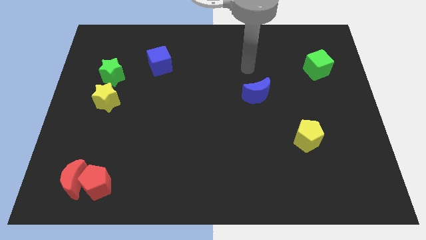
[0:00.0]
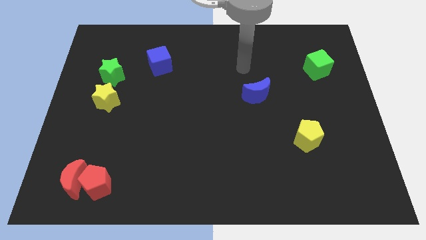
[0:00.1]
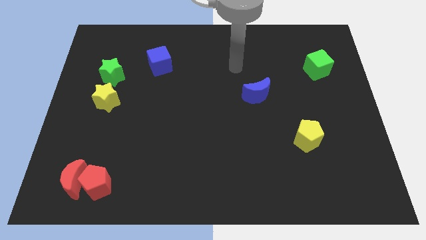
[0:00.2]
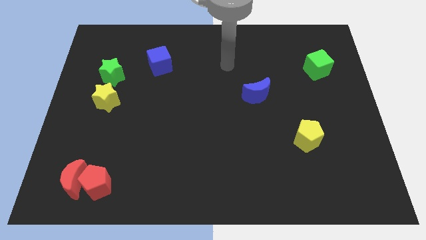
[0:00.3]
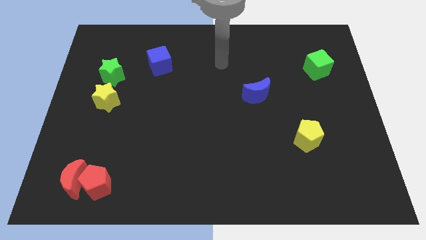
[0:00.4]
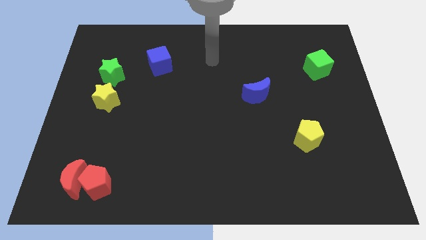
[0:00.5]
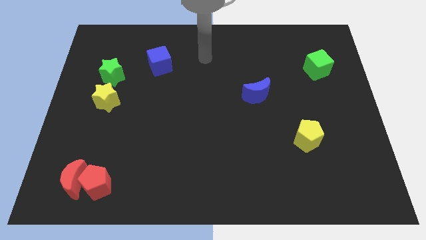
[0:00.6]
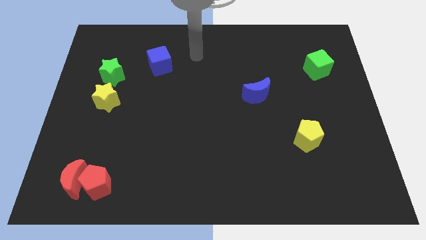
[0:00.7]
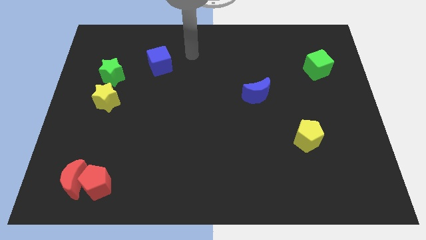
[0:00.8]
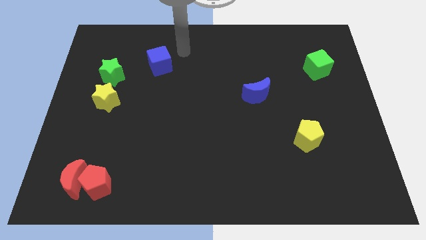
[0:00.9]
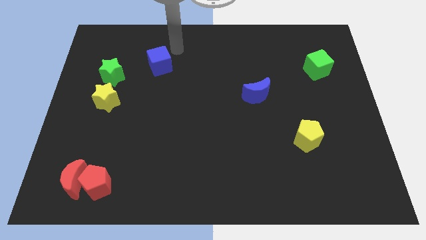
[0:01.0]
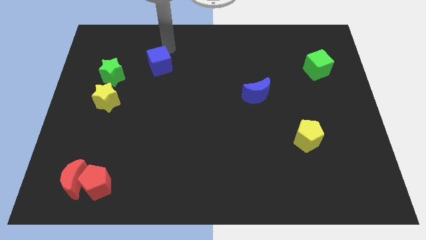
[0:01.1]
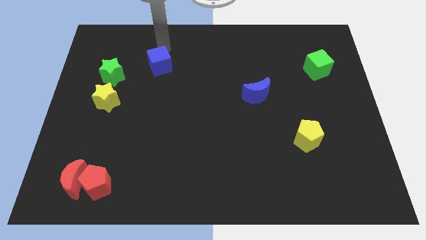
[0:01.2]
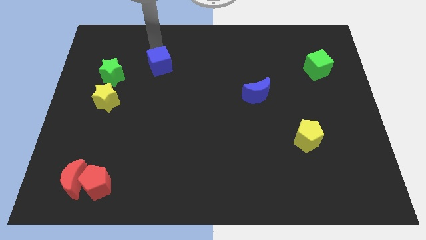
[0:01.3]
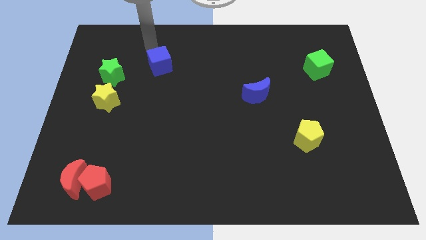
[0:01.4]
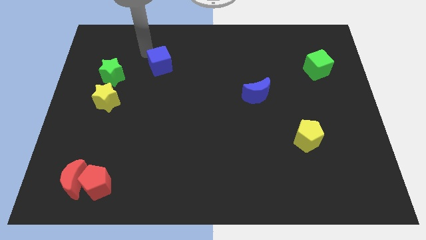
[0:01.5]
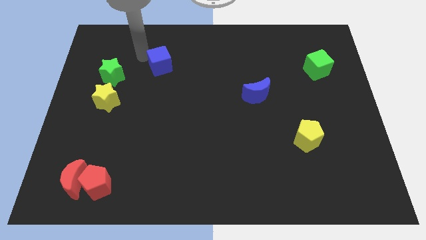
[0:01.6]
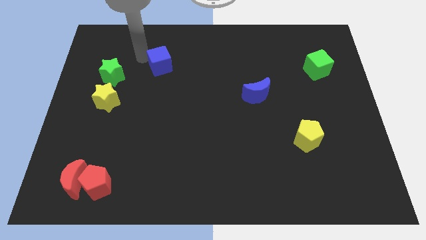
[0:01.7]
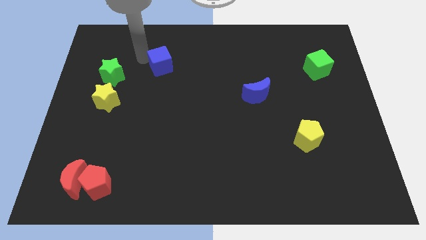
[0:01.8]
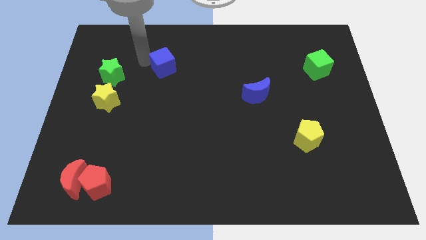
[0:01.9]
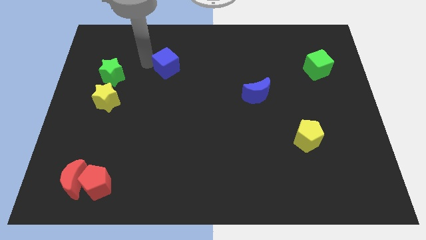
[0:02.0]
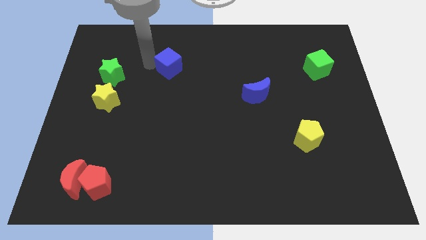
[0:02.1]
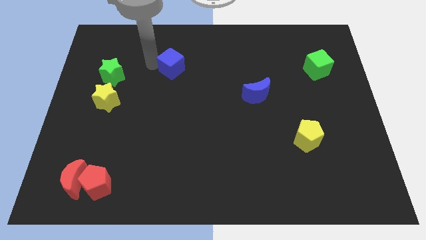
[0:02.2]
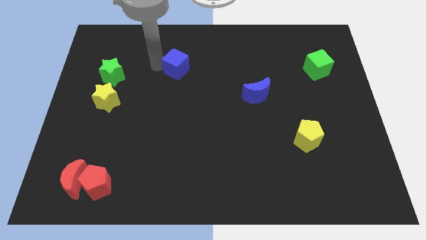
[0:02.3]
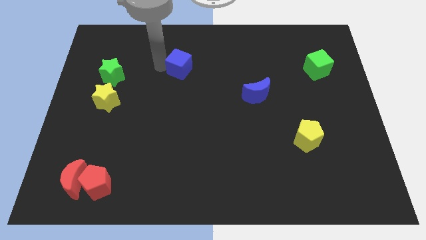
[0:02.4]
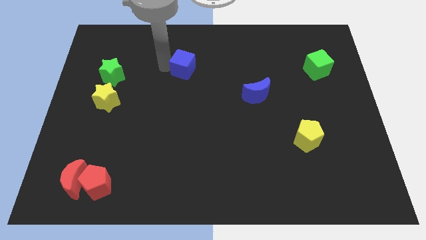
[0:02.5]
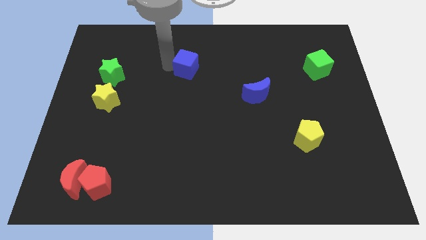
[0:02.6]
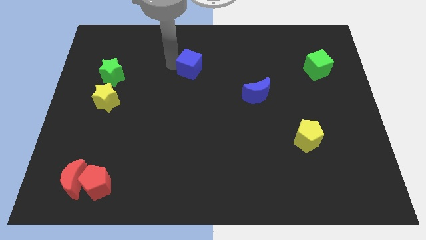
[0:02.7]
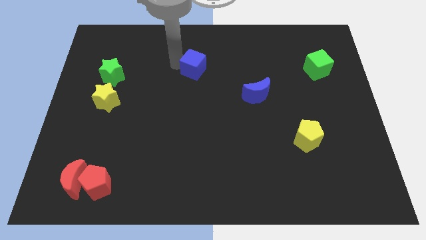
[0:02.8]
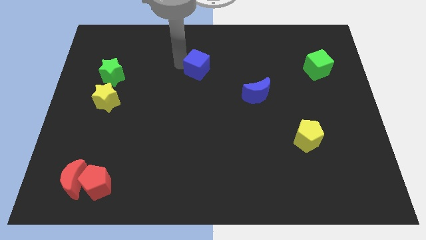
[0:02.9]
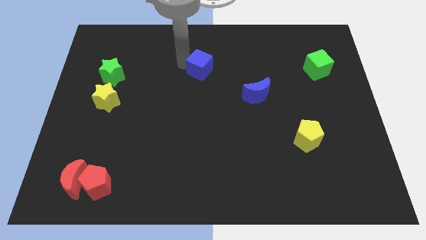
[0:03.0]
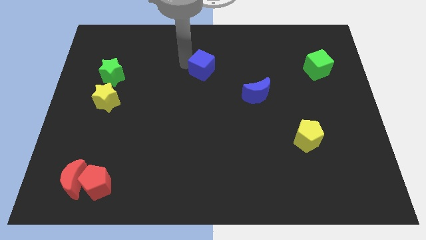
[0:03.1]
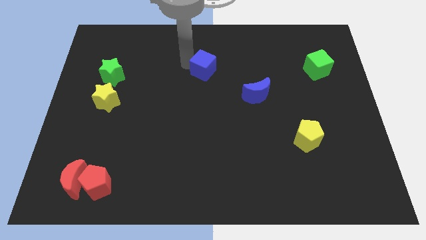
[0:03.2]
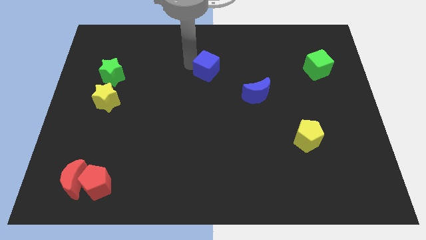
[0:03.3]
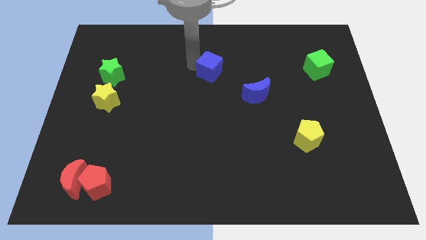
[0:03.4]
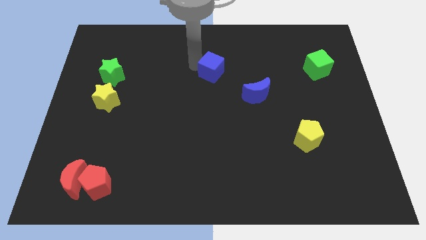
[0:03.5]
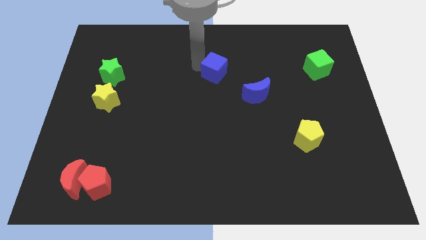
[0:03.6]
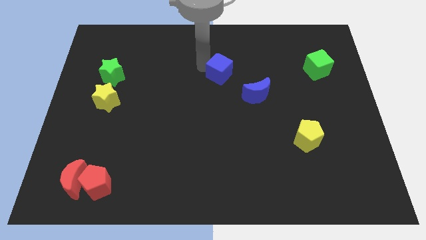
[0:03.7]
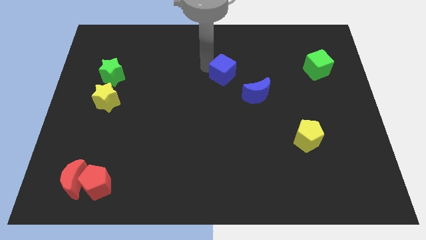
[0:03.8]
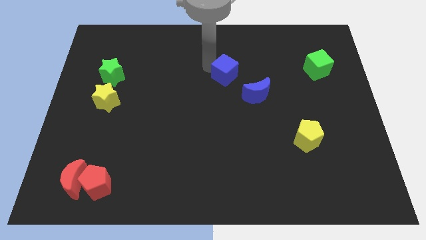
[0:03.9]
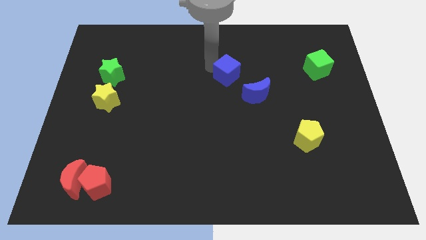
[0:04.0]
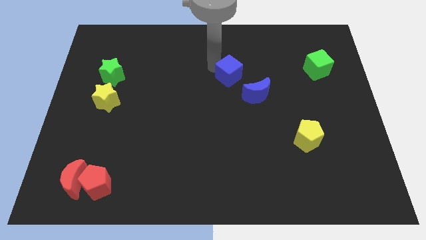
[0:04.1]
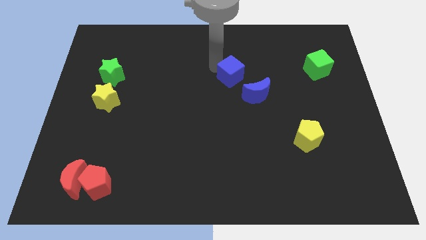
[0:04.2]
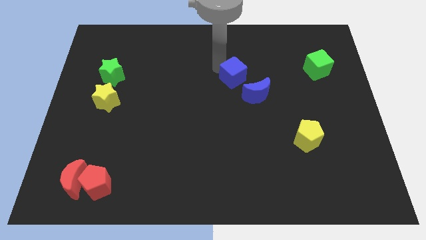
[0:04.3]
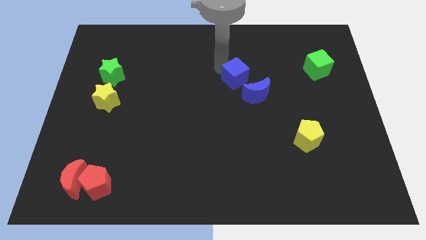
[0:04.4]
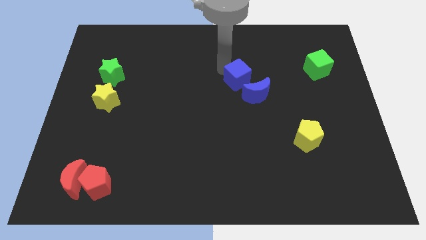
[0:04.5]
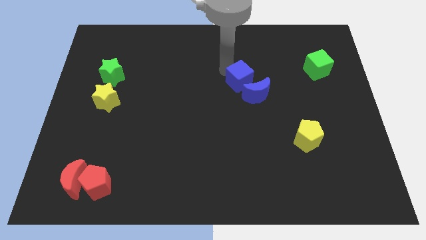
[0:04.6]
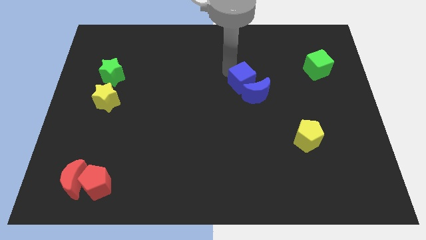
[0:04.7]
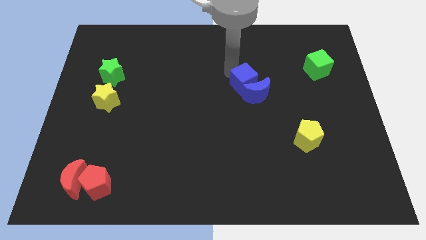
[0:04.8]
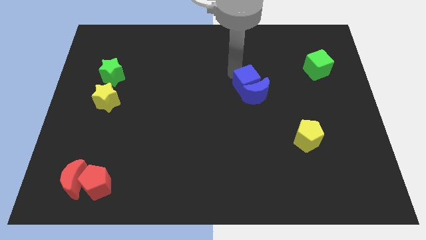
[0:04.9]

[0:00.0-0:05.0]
push the blue cube towards the blue moon

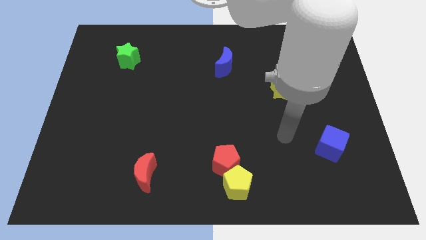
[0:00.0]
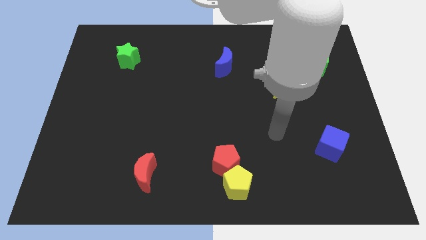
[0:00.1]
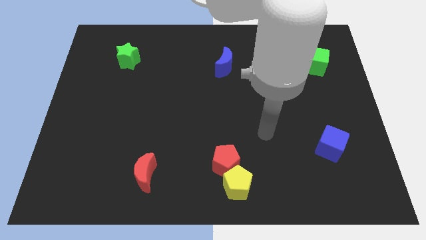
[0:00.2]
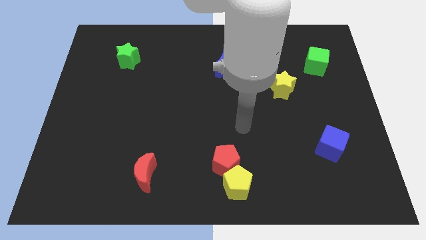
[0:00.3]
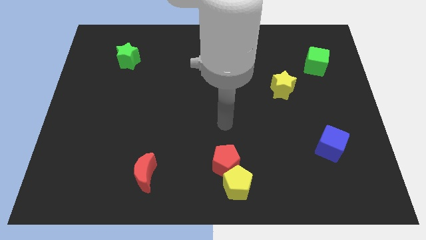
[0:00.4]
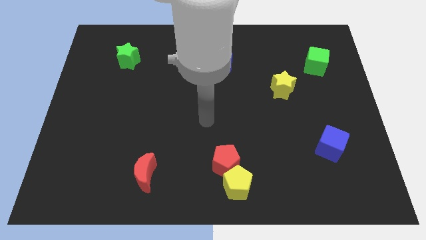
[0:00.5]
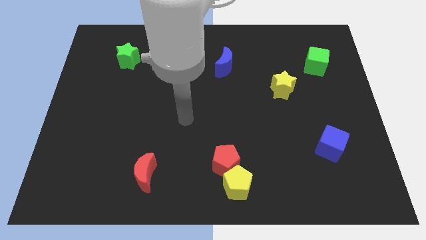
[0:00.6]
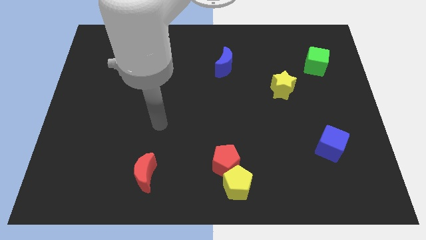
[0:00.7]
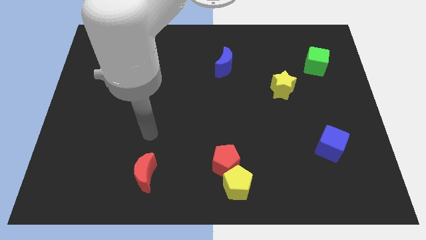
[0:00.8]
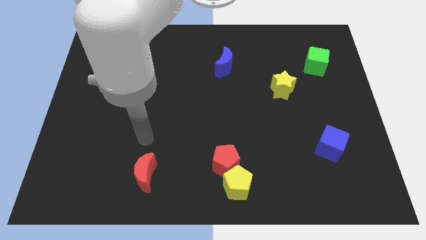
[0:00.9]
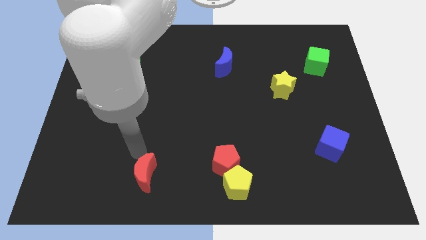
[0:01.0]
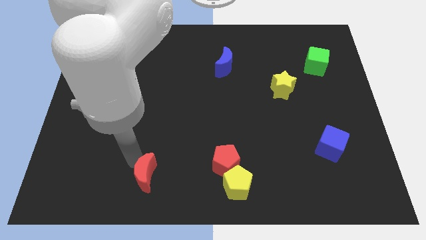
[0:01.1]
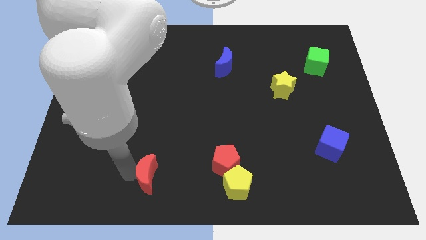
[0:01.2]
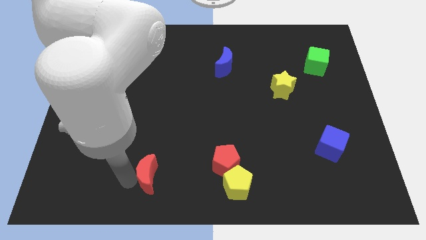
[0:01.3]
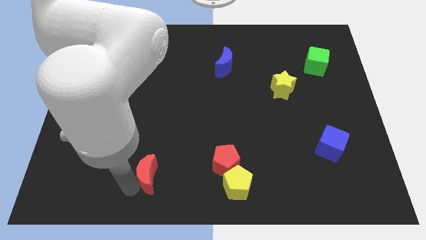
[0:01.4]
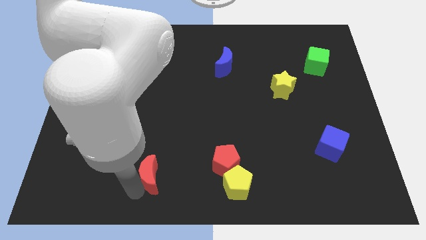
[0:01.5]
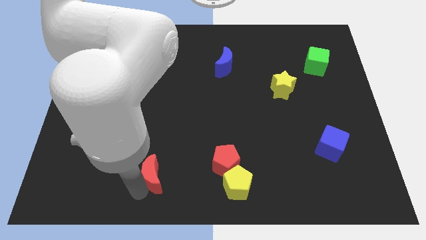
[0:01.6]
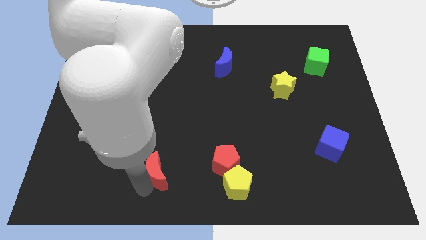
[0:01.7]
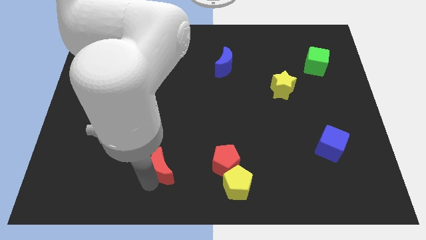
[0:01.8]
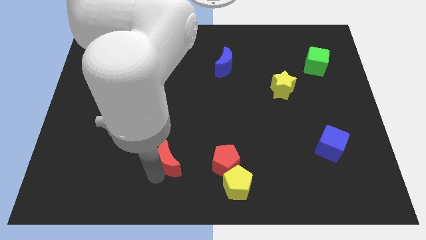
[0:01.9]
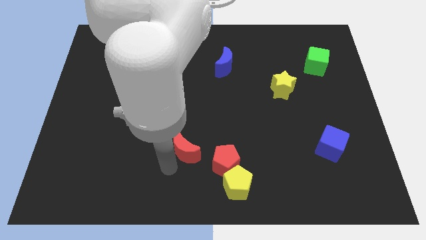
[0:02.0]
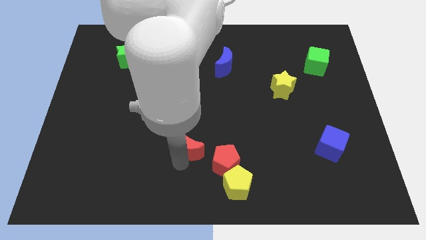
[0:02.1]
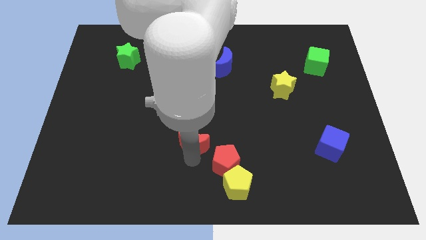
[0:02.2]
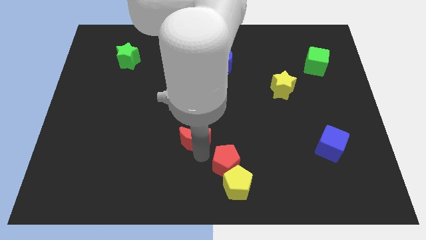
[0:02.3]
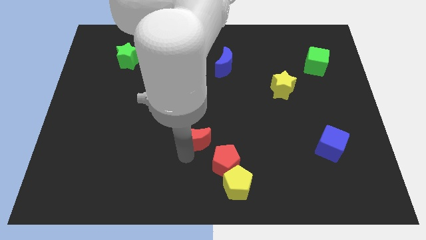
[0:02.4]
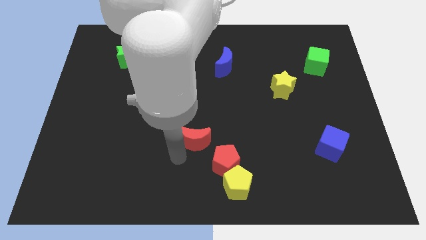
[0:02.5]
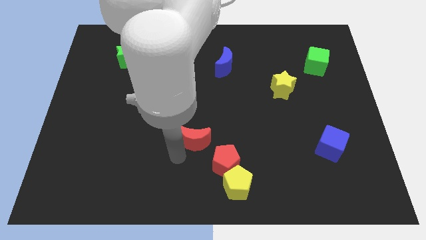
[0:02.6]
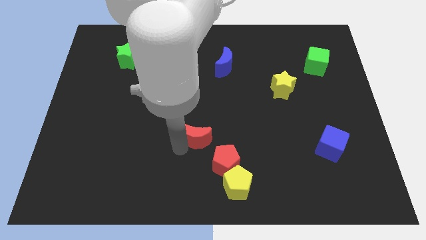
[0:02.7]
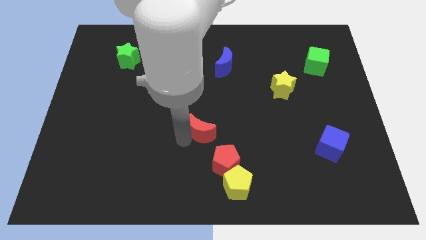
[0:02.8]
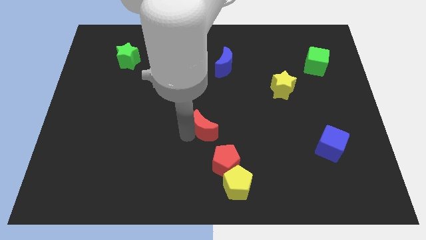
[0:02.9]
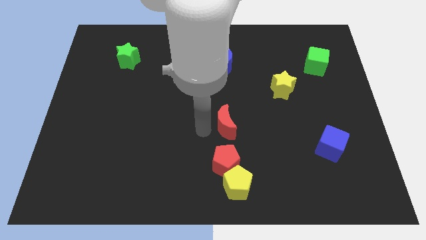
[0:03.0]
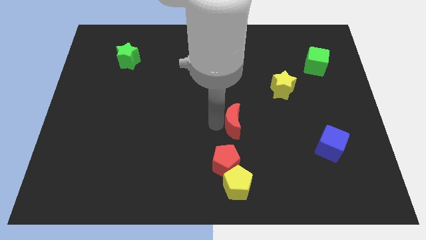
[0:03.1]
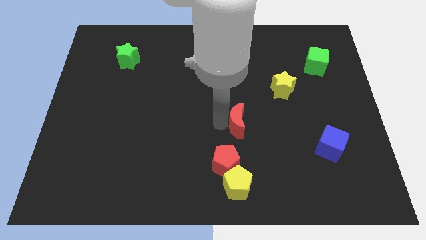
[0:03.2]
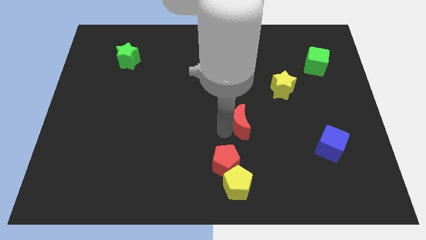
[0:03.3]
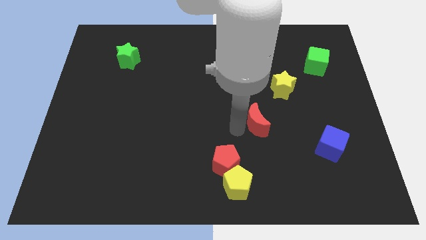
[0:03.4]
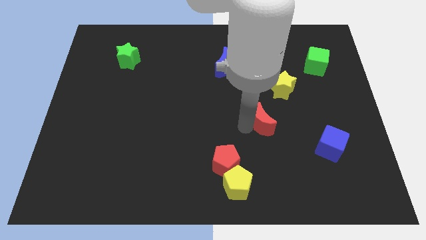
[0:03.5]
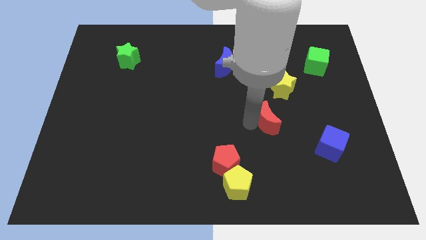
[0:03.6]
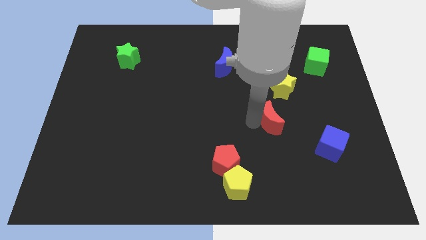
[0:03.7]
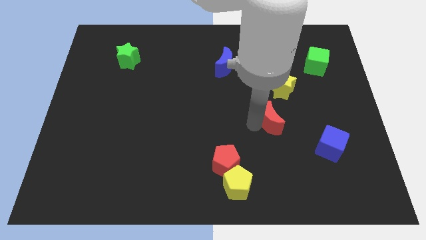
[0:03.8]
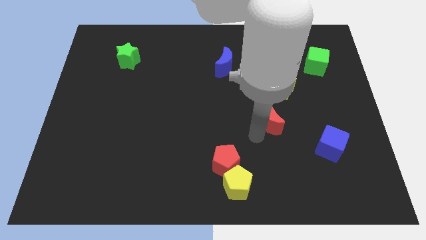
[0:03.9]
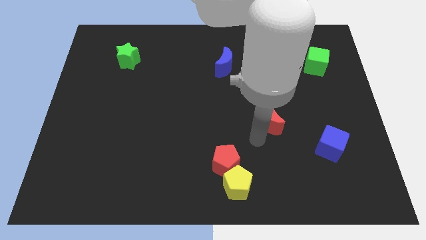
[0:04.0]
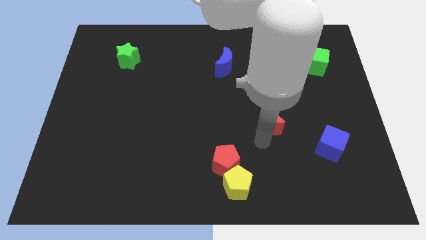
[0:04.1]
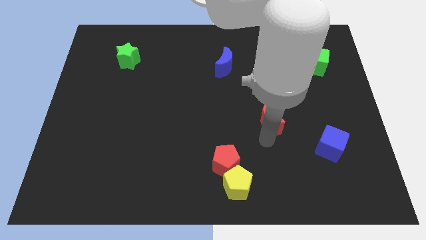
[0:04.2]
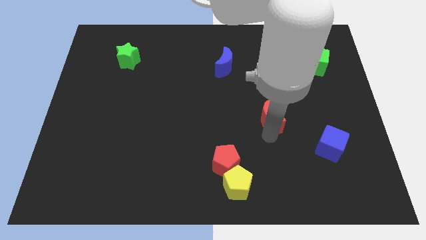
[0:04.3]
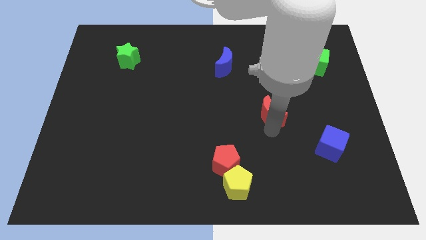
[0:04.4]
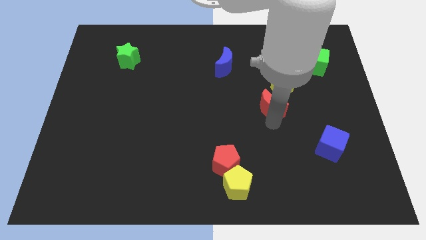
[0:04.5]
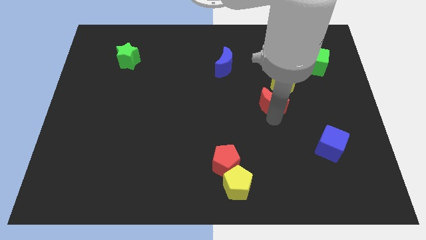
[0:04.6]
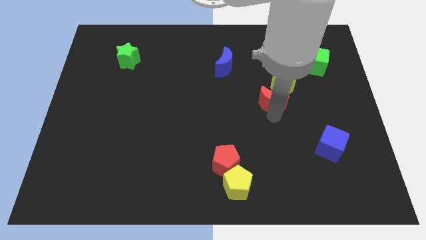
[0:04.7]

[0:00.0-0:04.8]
slide the red moon next to the yellow star
